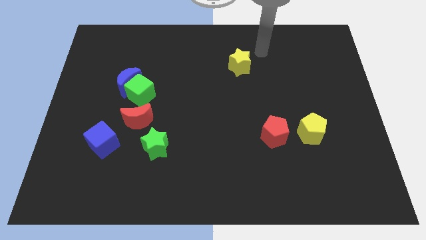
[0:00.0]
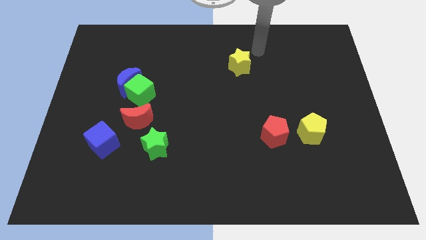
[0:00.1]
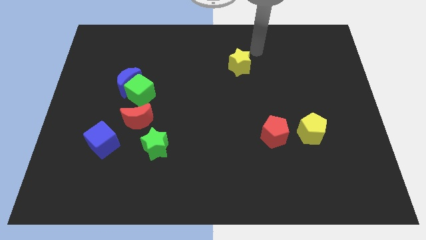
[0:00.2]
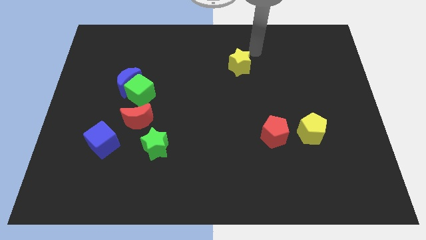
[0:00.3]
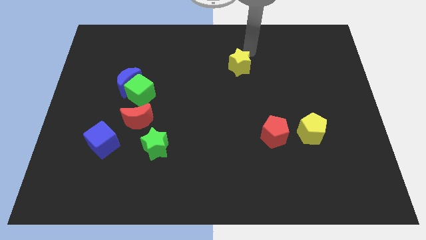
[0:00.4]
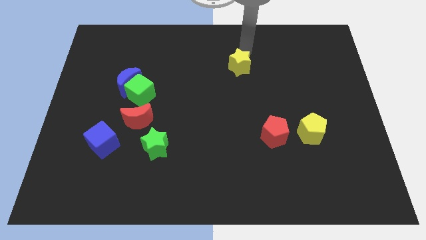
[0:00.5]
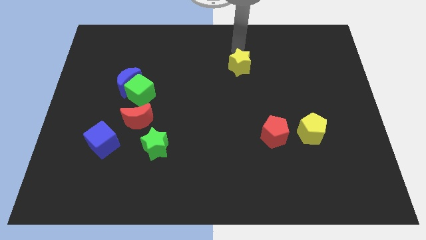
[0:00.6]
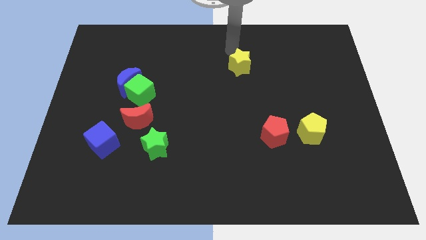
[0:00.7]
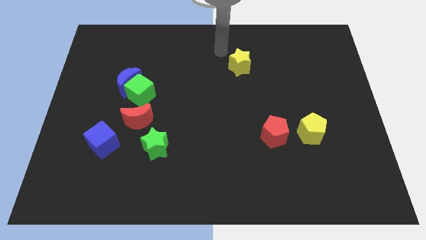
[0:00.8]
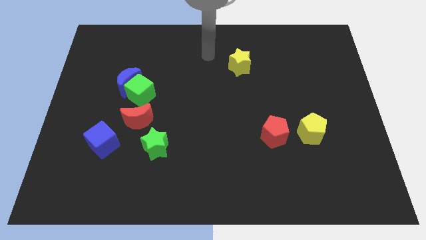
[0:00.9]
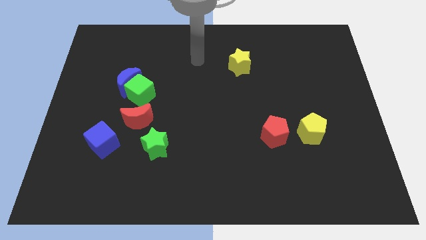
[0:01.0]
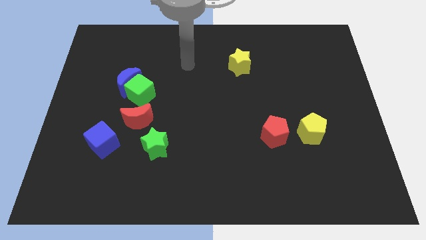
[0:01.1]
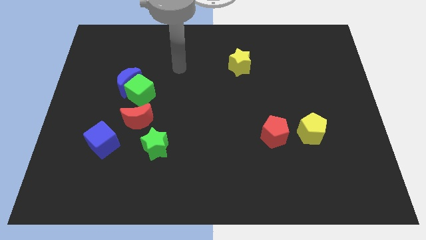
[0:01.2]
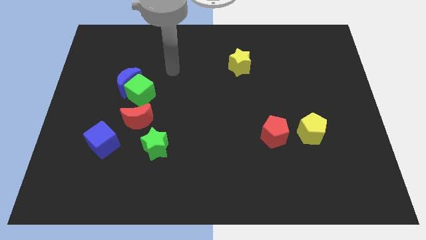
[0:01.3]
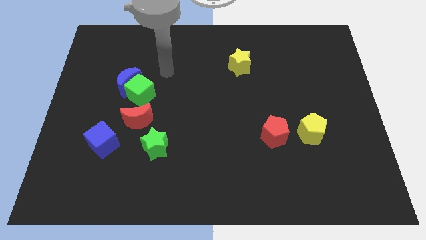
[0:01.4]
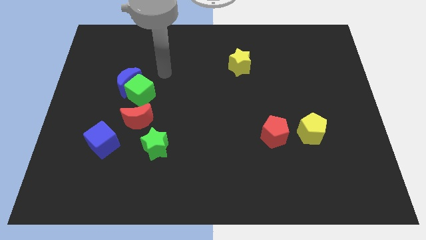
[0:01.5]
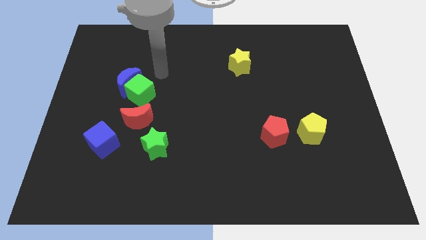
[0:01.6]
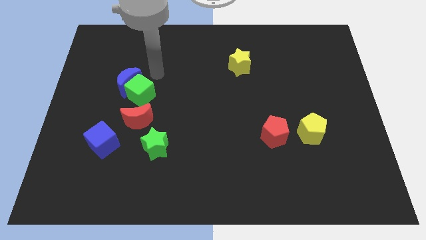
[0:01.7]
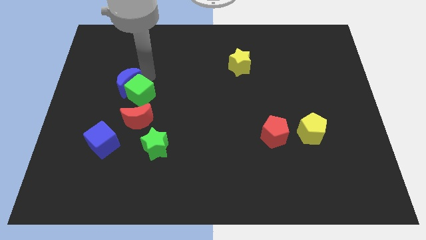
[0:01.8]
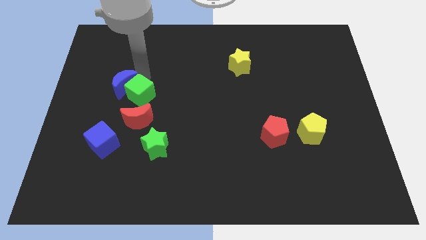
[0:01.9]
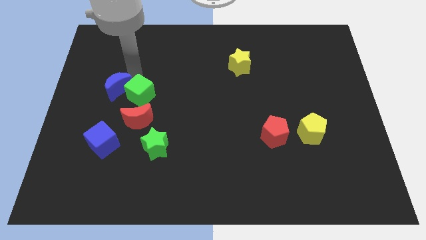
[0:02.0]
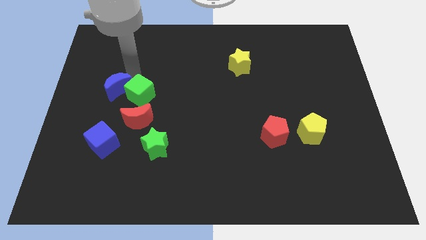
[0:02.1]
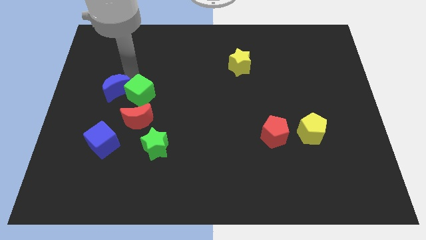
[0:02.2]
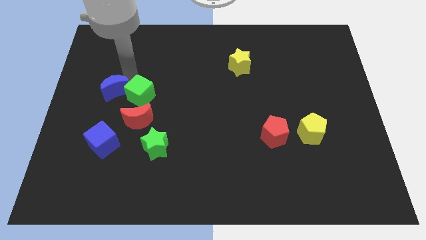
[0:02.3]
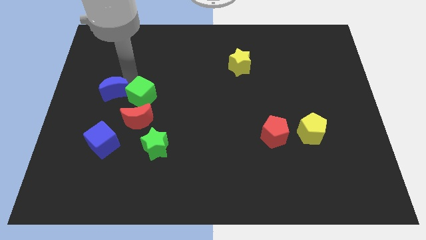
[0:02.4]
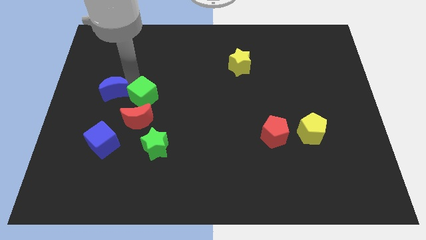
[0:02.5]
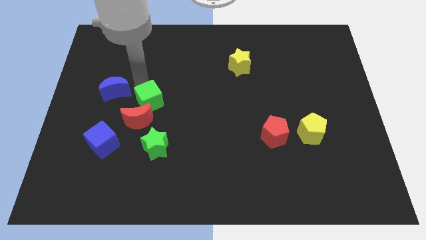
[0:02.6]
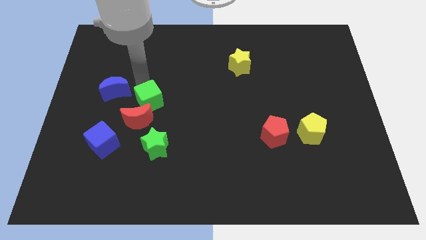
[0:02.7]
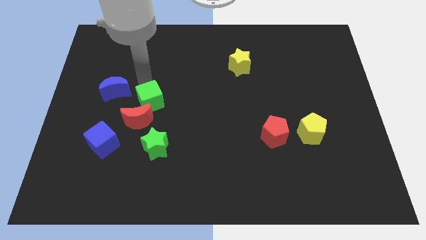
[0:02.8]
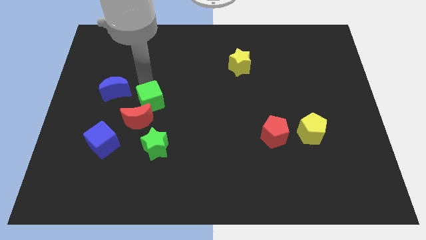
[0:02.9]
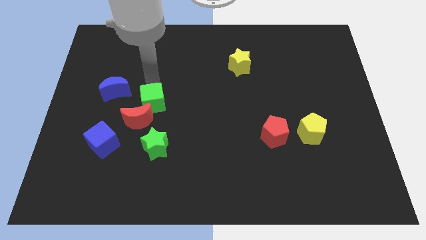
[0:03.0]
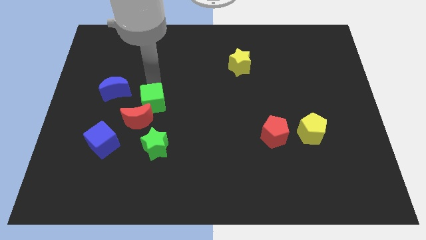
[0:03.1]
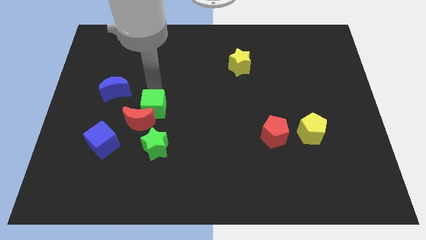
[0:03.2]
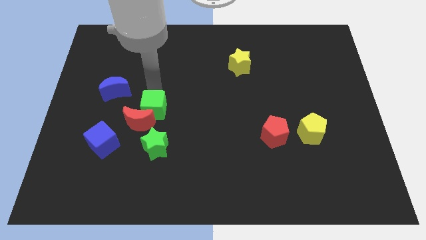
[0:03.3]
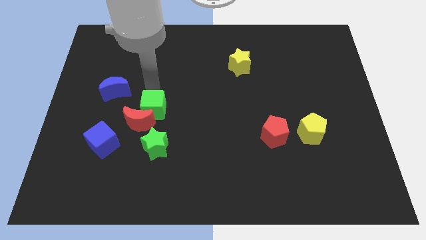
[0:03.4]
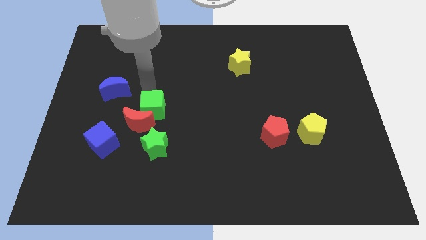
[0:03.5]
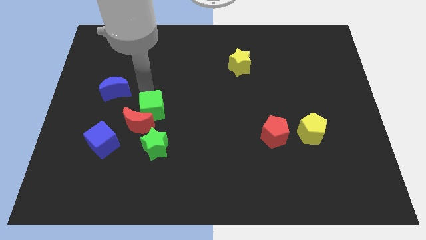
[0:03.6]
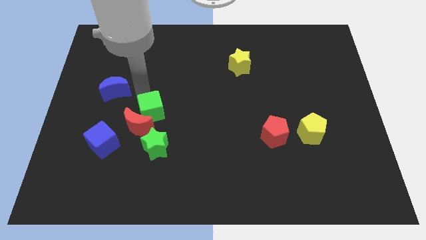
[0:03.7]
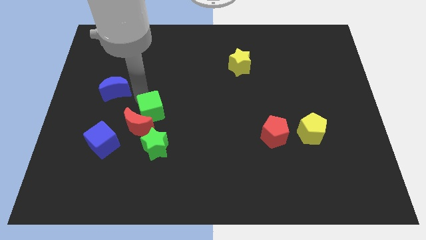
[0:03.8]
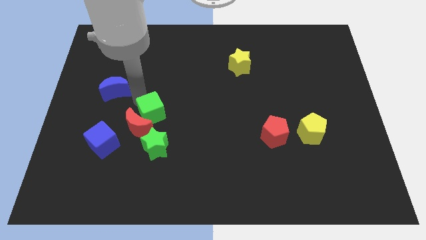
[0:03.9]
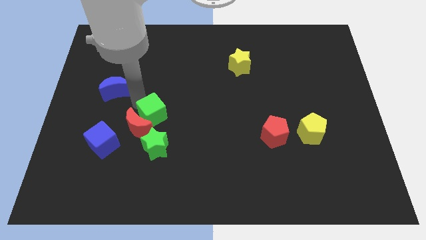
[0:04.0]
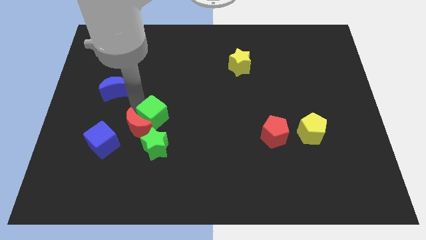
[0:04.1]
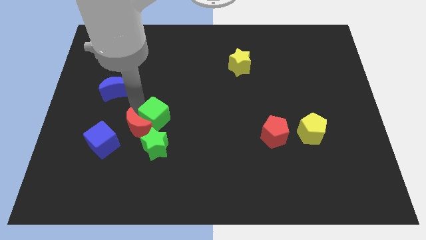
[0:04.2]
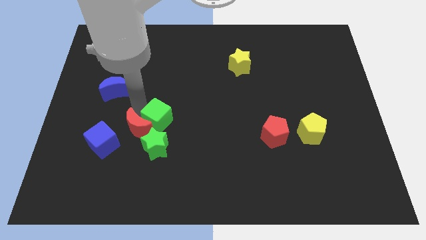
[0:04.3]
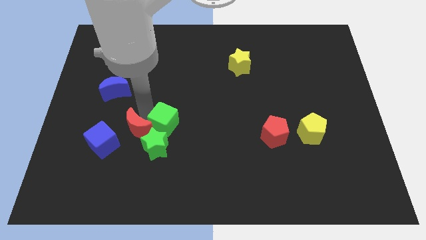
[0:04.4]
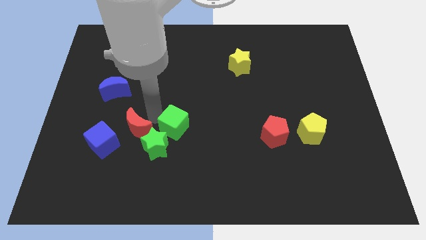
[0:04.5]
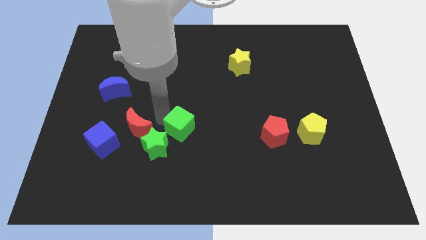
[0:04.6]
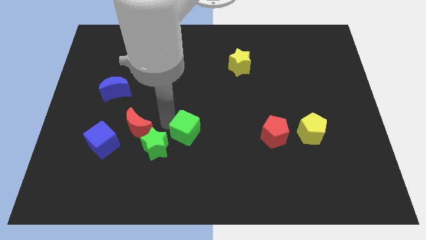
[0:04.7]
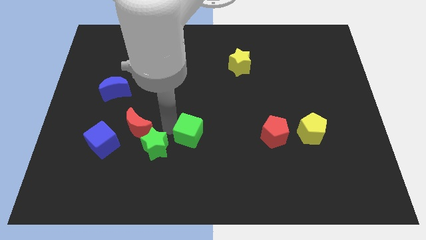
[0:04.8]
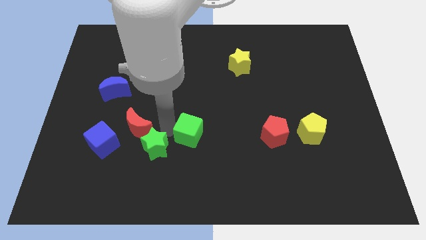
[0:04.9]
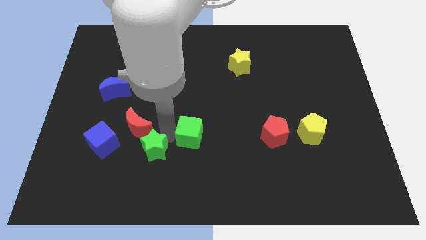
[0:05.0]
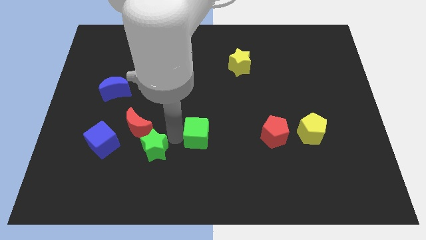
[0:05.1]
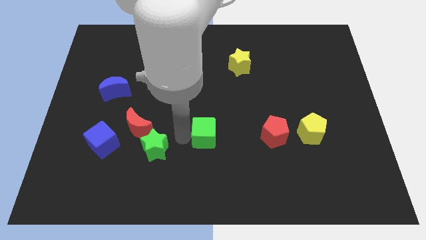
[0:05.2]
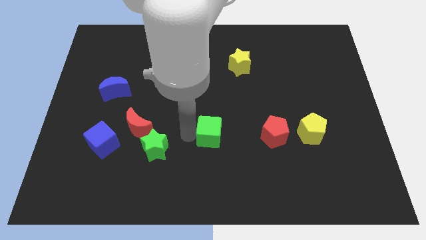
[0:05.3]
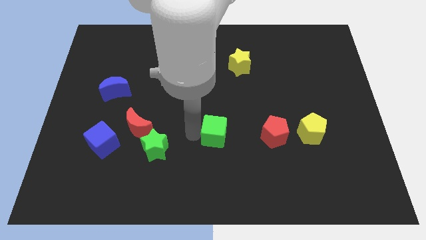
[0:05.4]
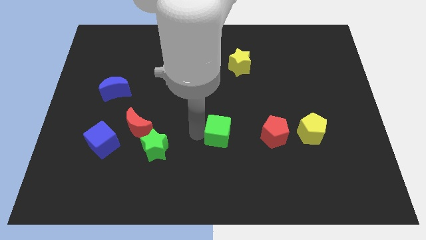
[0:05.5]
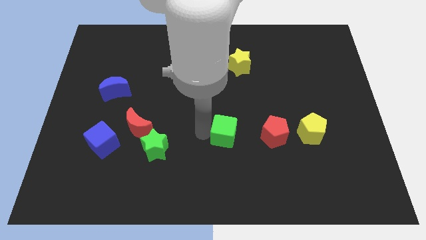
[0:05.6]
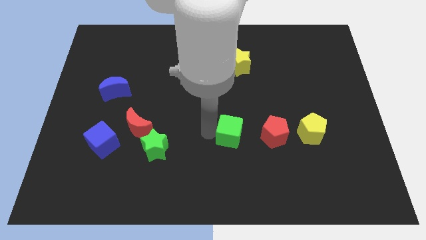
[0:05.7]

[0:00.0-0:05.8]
move the green cube to the left of red pentagon

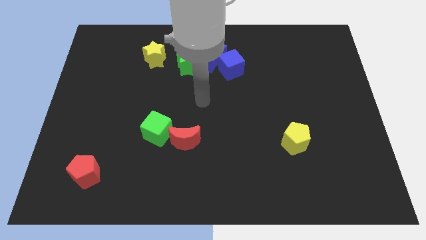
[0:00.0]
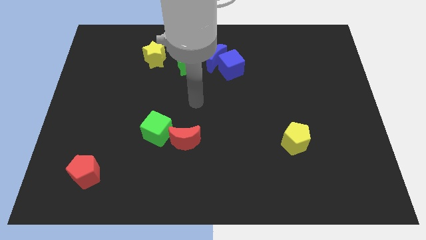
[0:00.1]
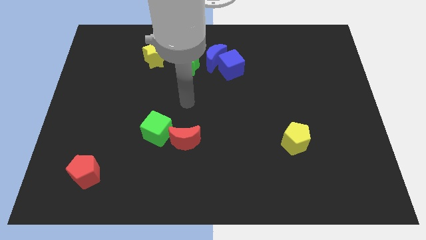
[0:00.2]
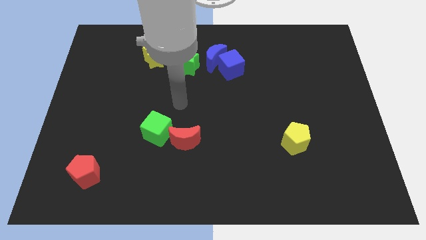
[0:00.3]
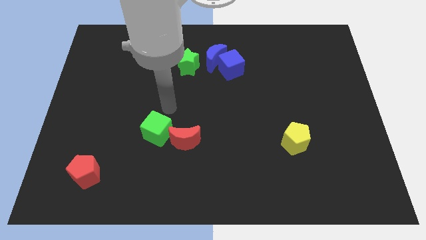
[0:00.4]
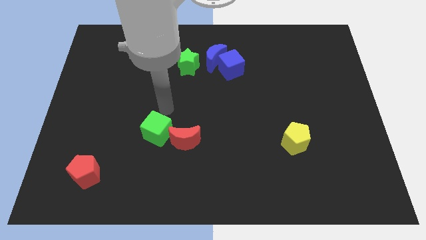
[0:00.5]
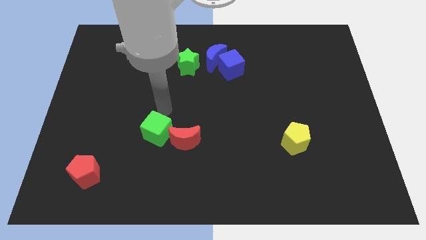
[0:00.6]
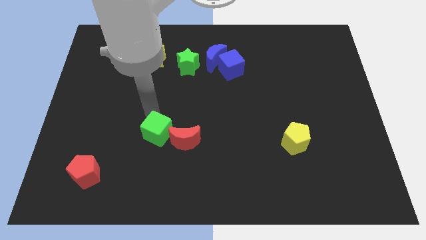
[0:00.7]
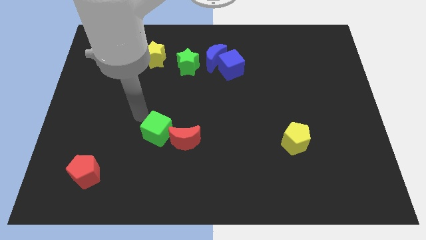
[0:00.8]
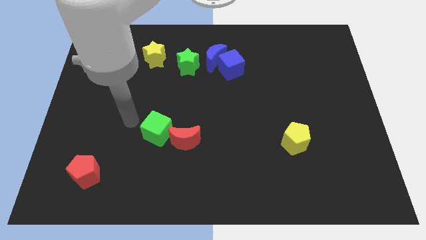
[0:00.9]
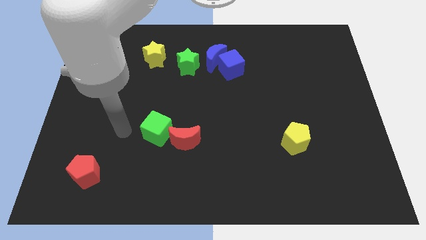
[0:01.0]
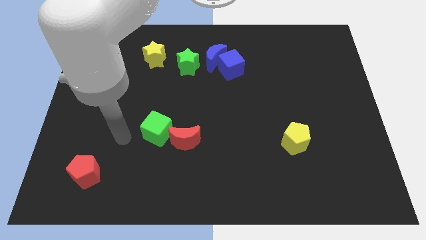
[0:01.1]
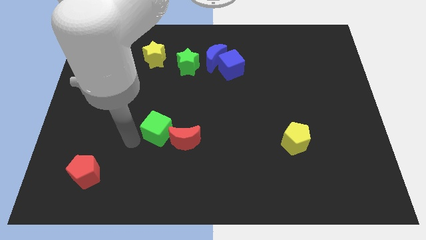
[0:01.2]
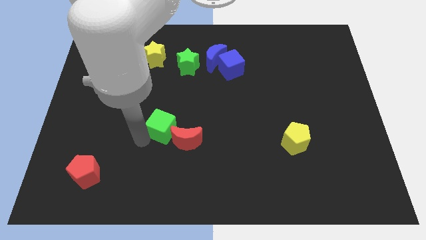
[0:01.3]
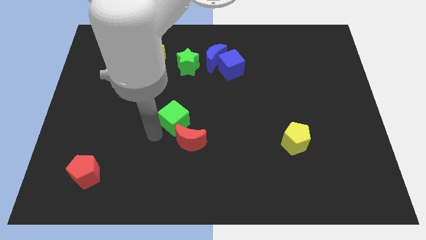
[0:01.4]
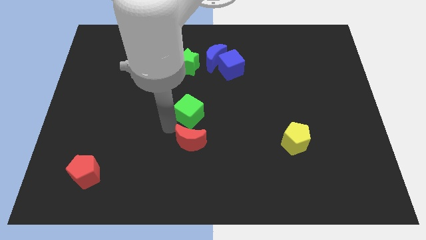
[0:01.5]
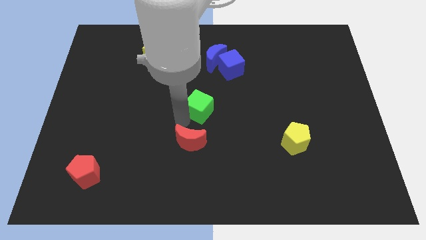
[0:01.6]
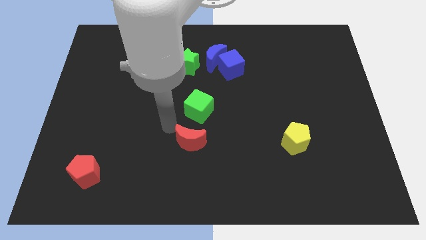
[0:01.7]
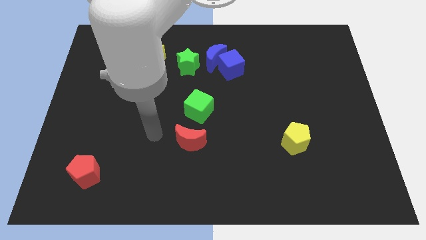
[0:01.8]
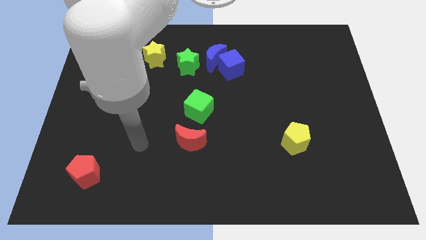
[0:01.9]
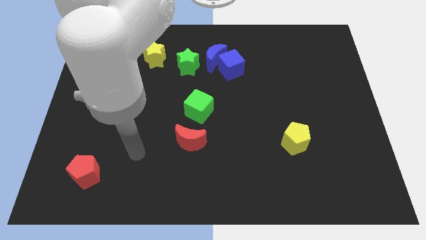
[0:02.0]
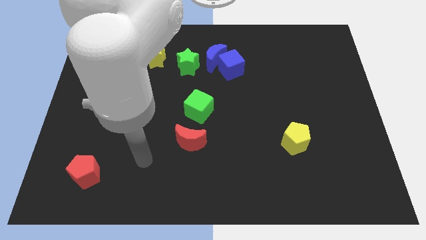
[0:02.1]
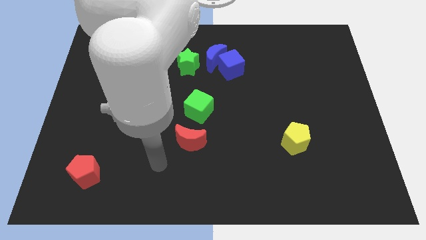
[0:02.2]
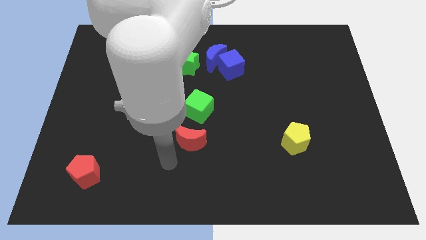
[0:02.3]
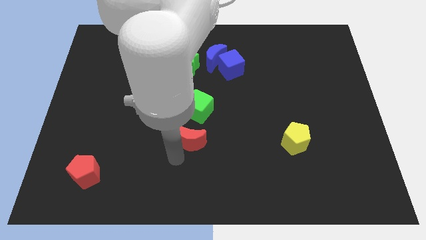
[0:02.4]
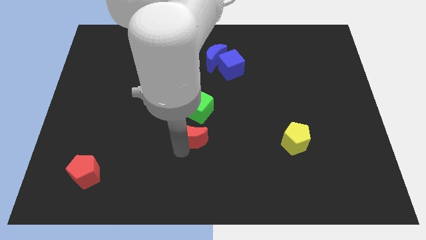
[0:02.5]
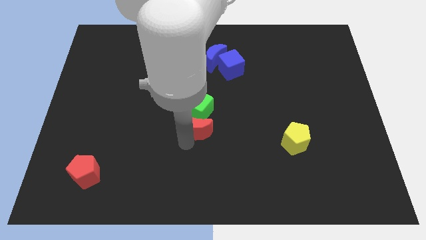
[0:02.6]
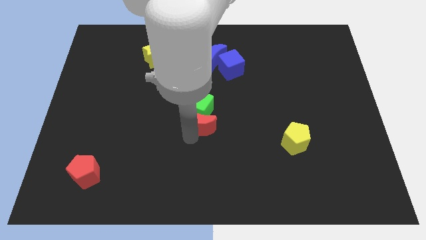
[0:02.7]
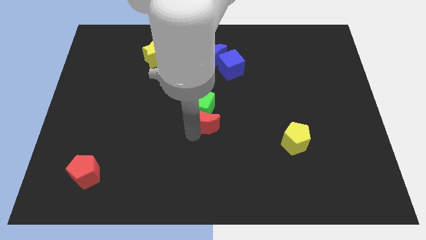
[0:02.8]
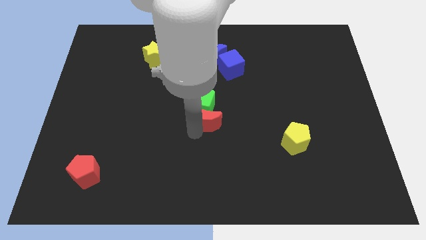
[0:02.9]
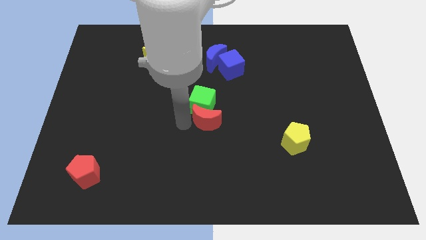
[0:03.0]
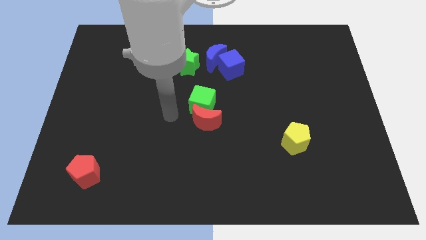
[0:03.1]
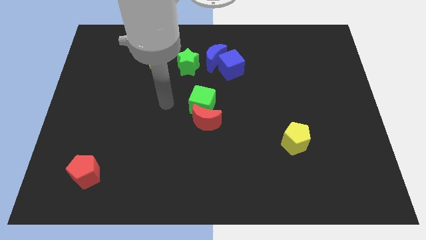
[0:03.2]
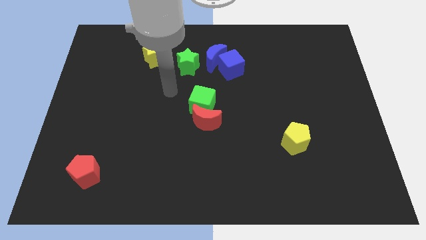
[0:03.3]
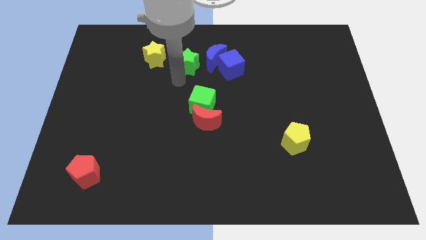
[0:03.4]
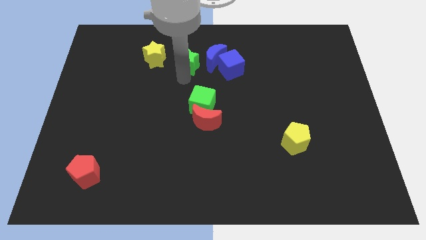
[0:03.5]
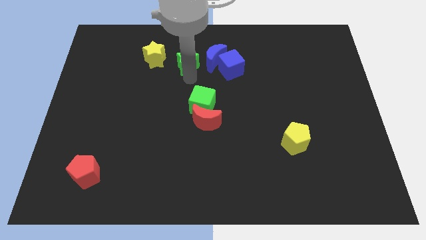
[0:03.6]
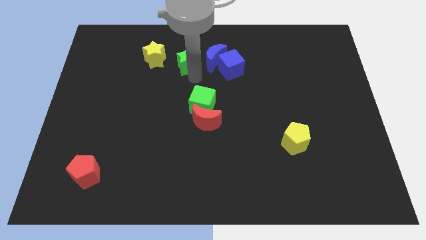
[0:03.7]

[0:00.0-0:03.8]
move the green cube and the red moon towards the top center
